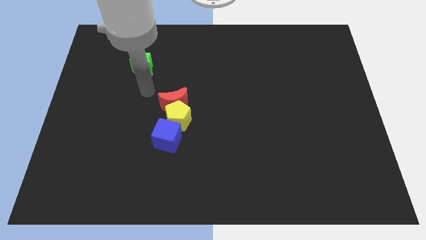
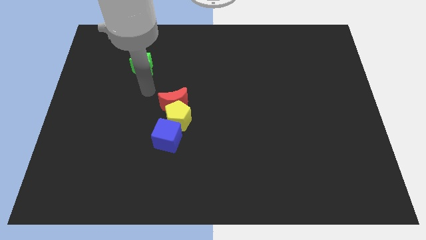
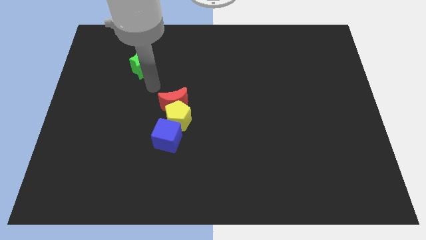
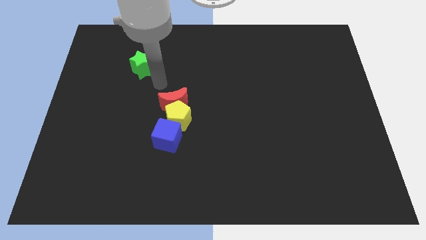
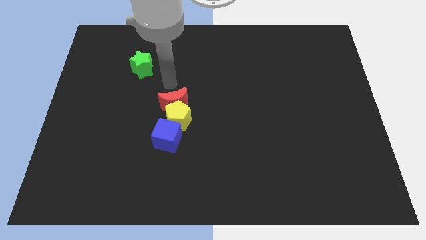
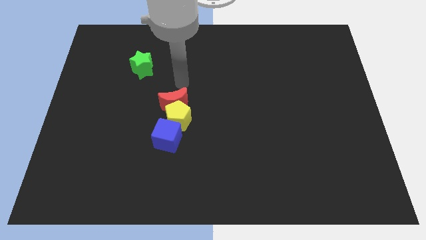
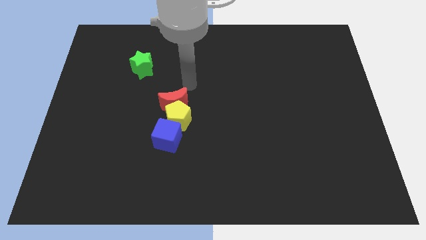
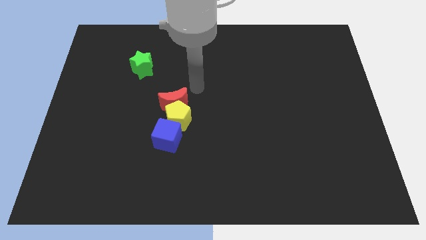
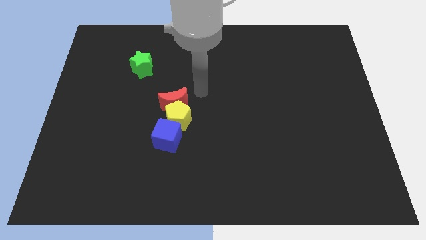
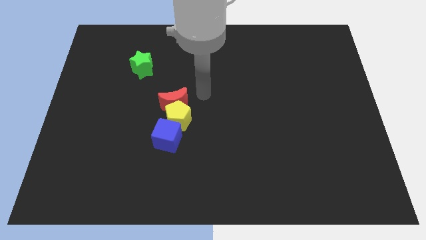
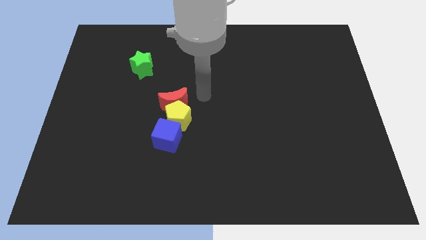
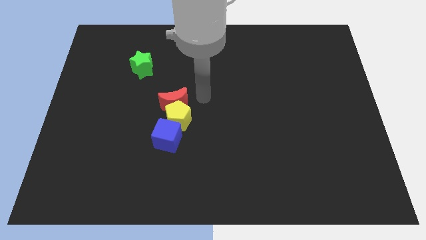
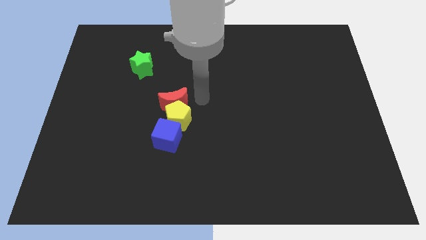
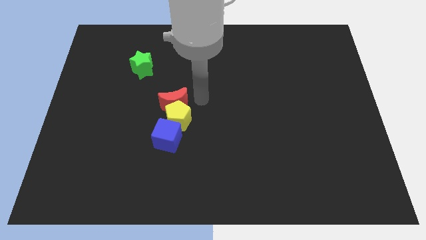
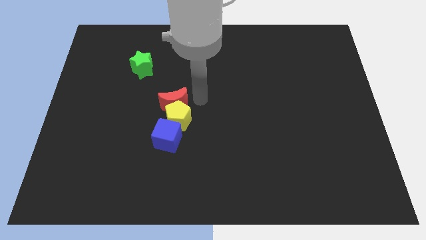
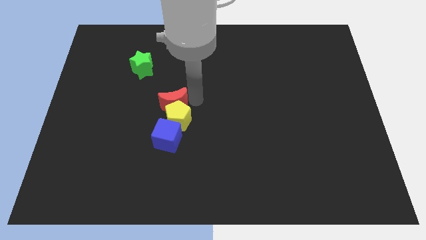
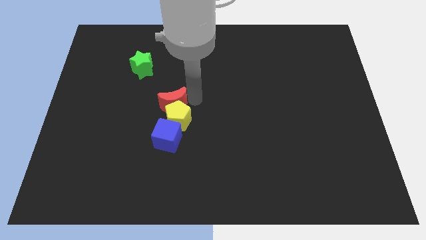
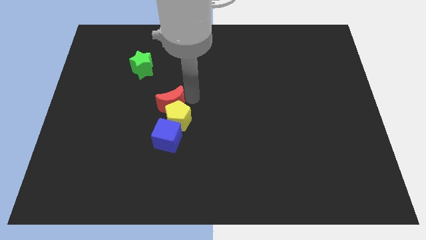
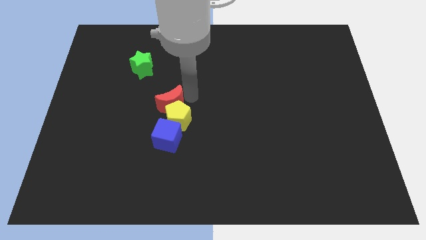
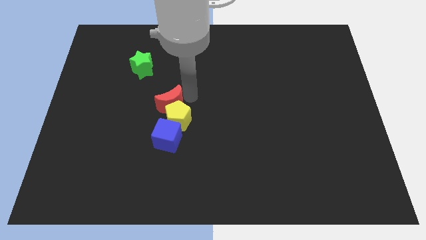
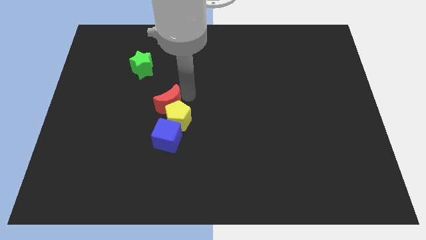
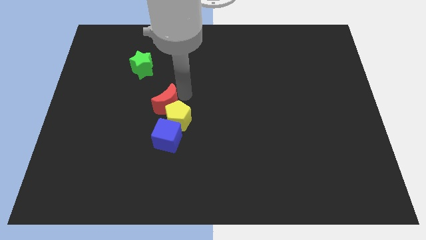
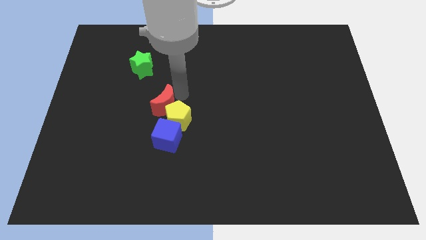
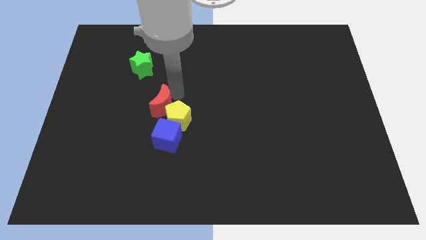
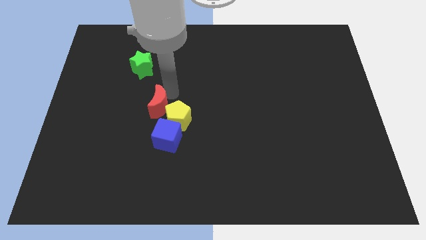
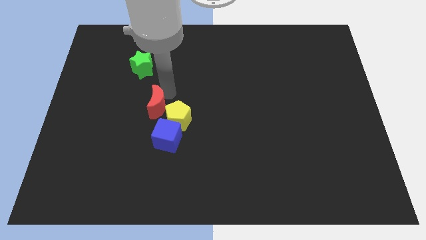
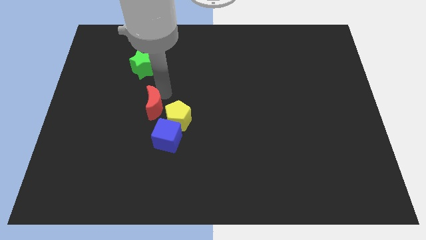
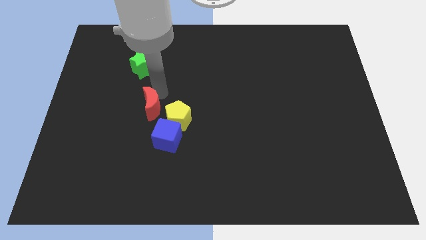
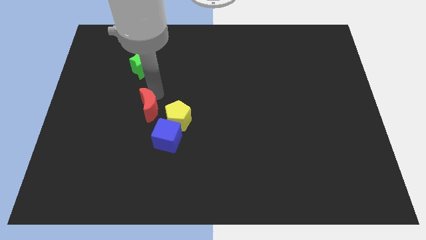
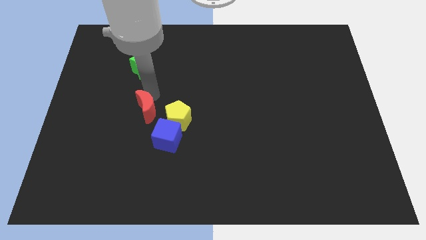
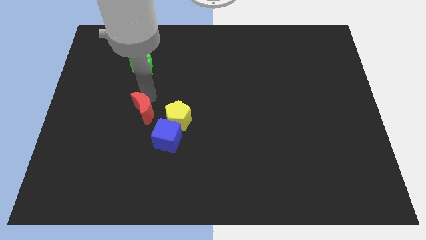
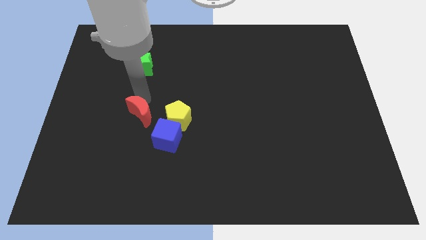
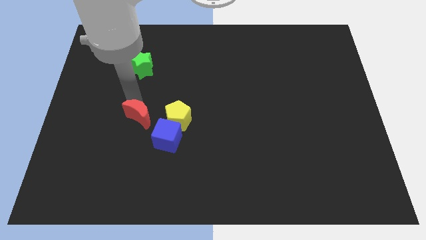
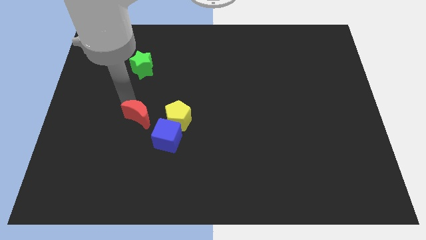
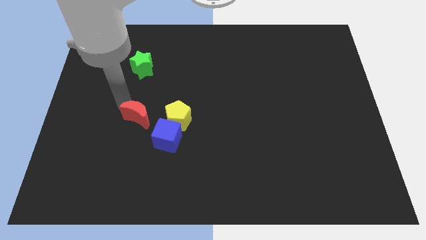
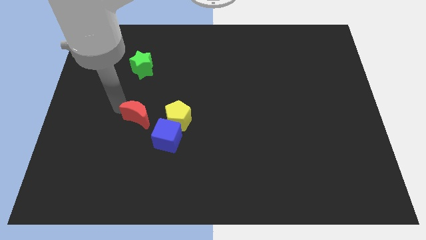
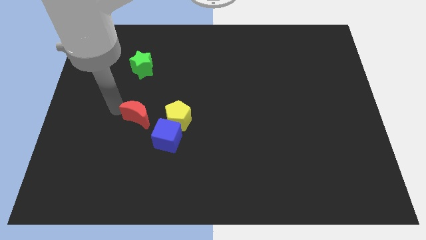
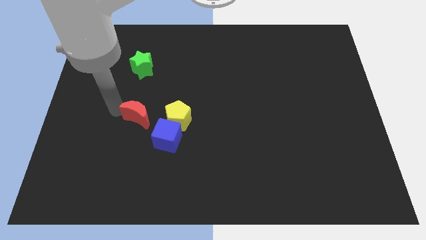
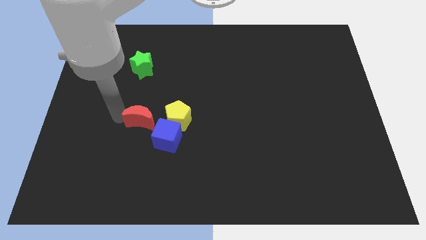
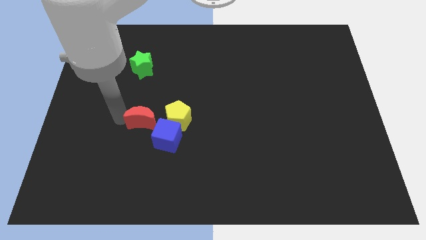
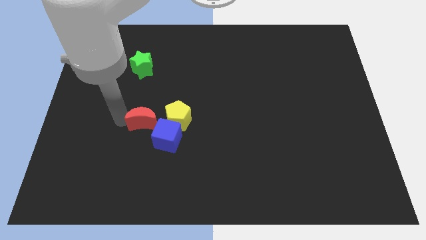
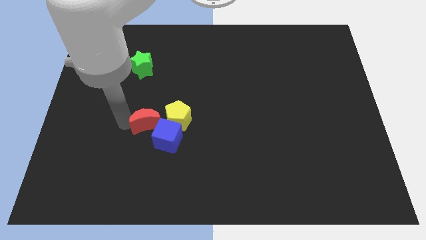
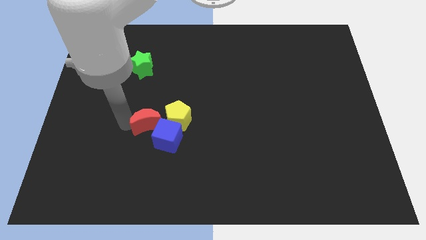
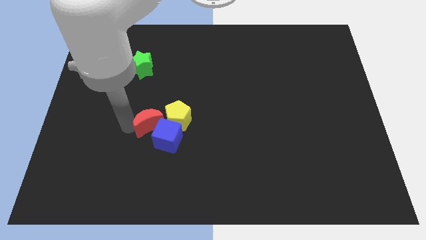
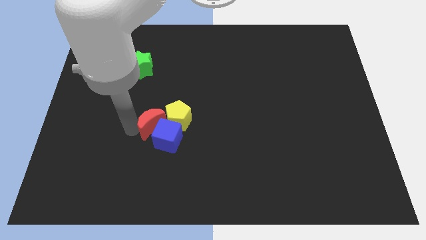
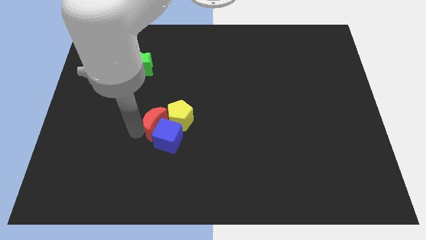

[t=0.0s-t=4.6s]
slide the red block towards the cube

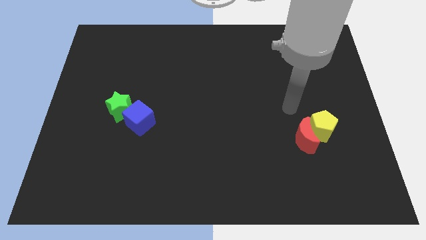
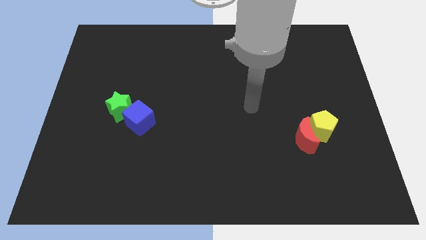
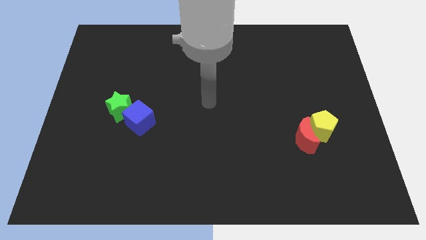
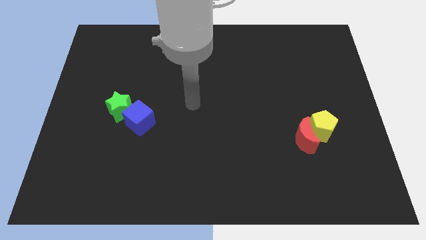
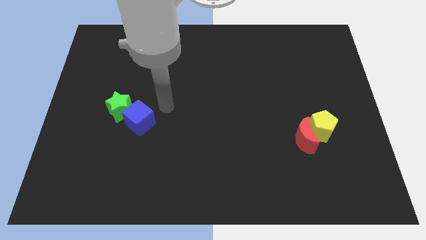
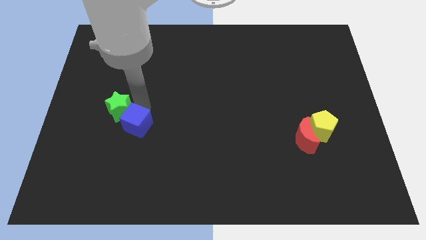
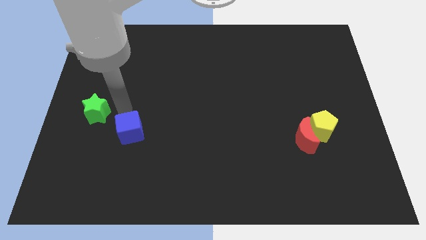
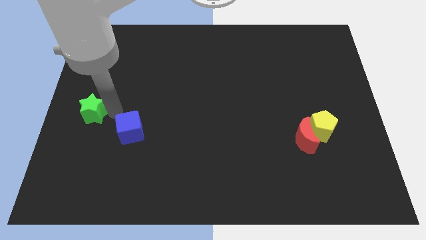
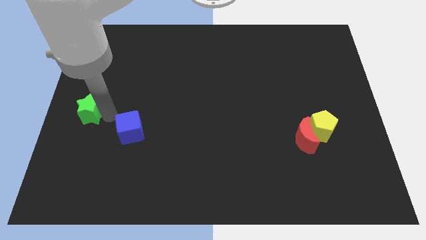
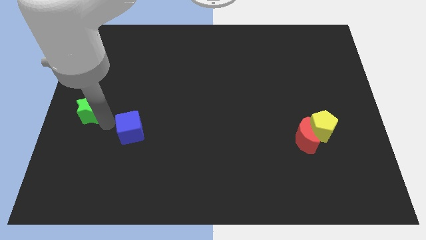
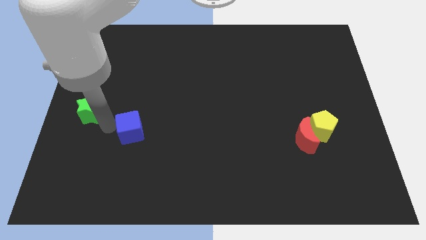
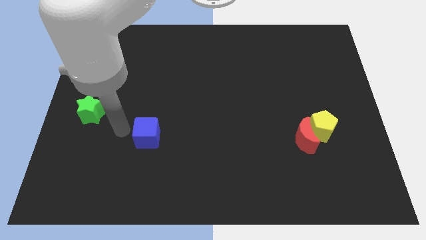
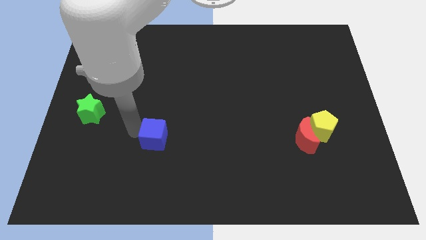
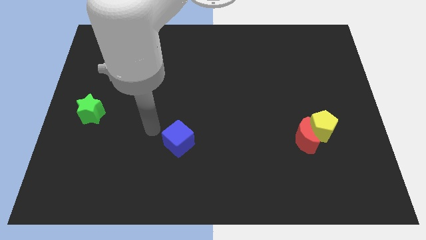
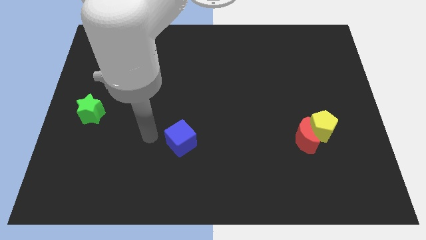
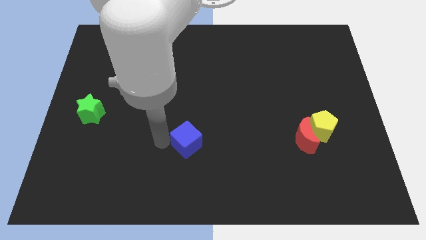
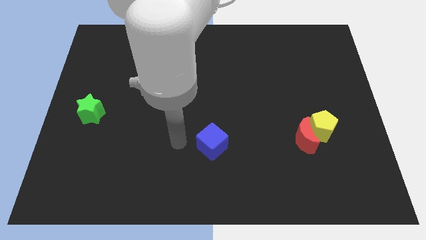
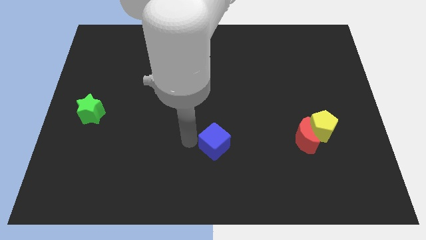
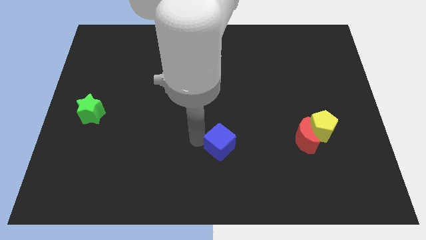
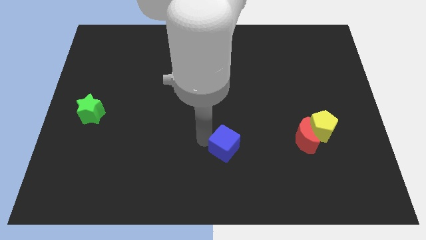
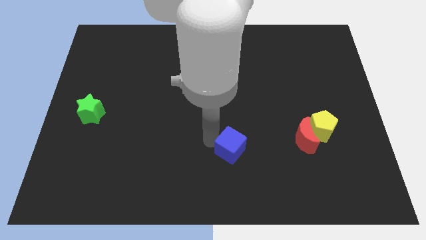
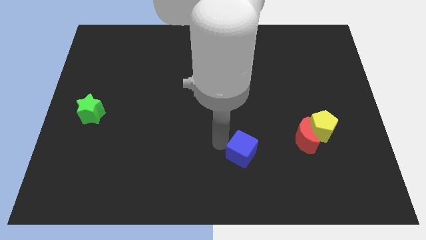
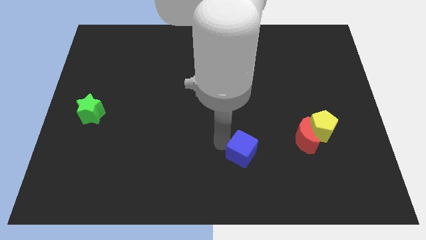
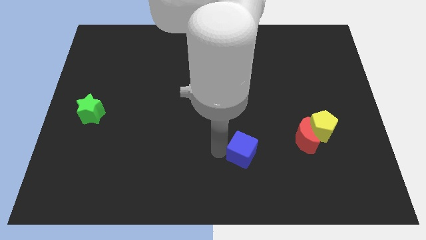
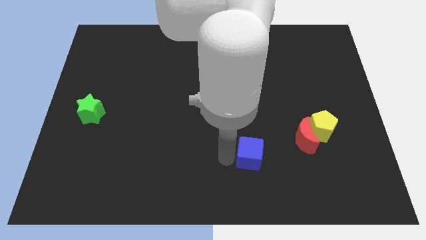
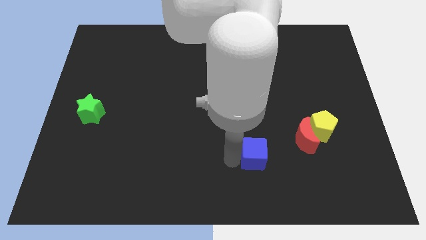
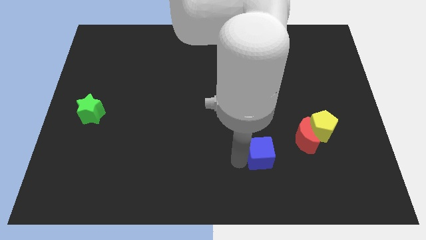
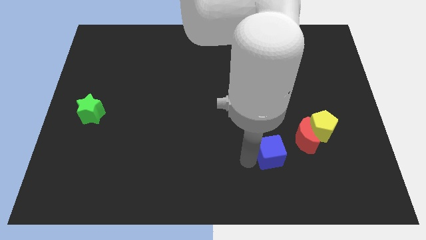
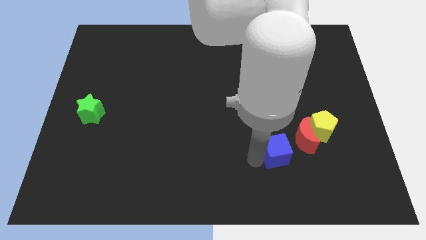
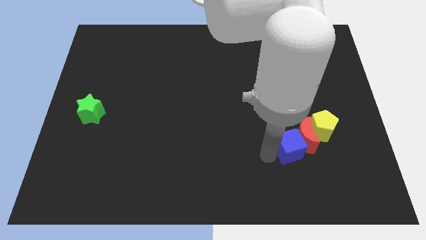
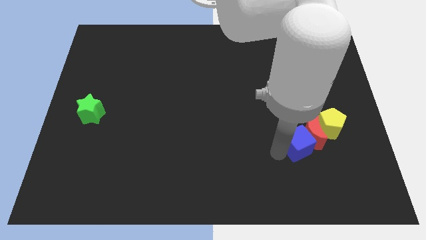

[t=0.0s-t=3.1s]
move the blue cube close to the red moon

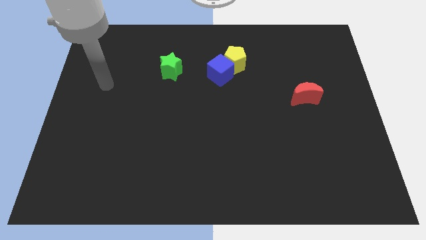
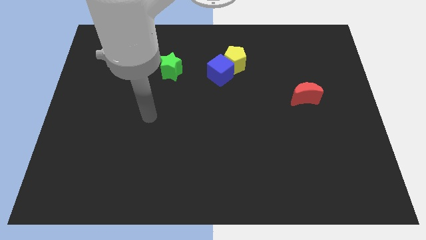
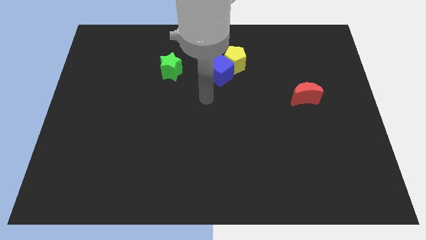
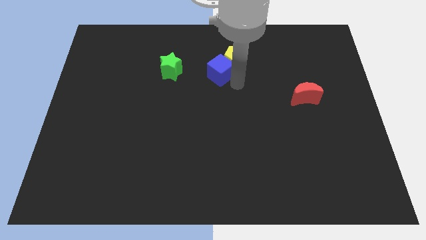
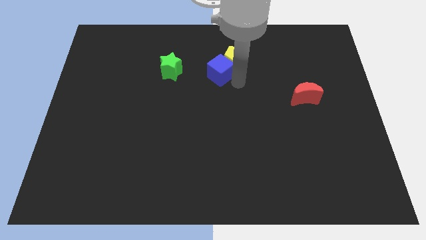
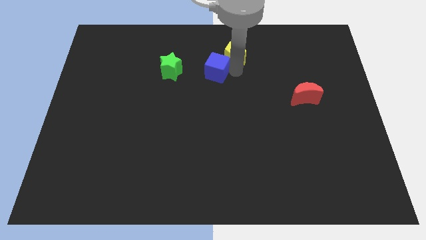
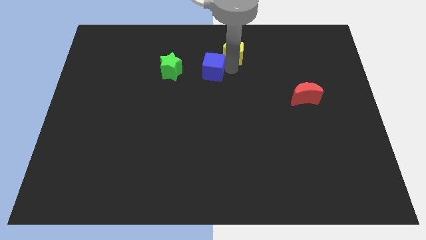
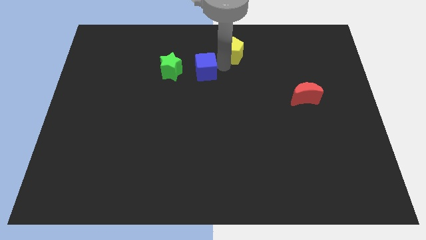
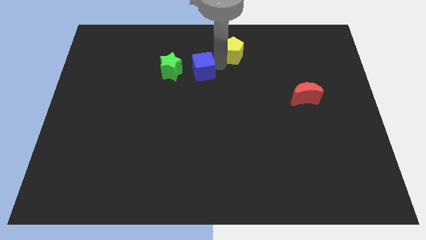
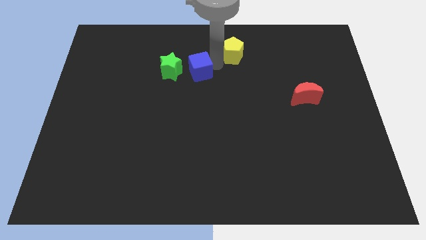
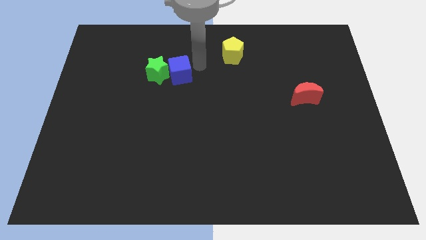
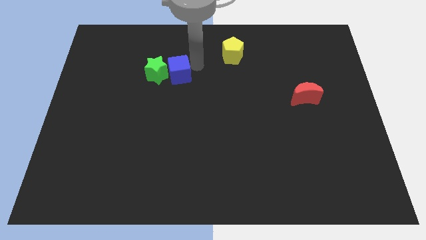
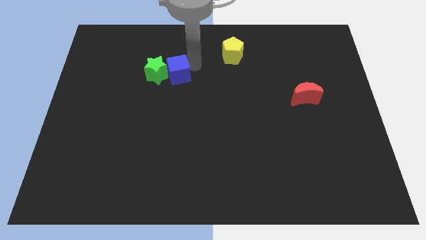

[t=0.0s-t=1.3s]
put the blue cube to the green block
